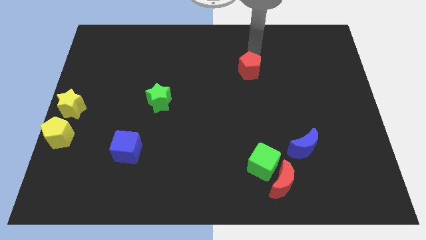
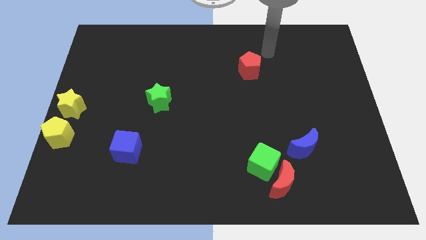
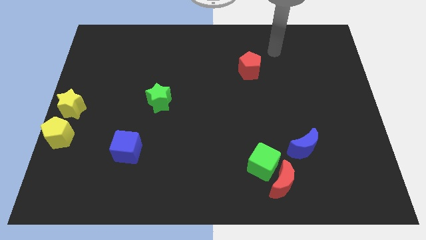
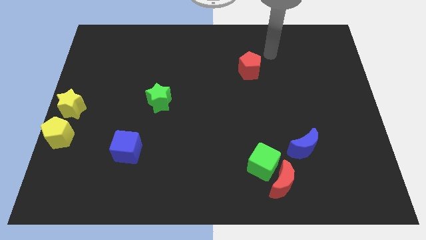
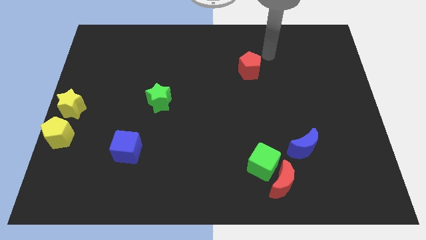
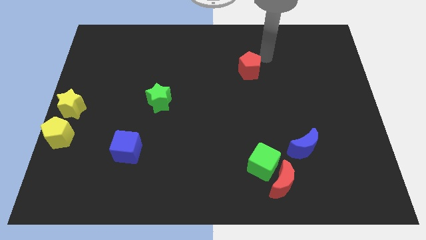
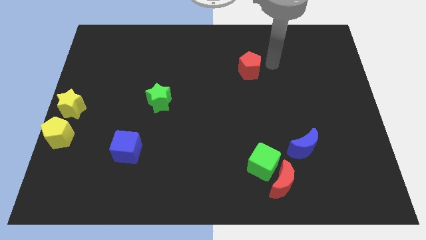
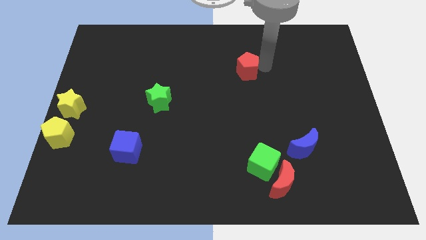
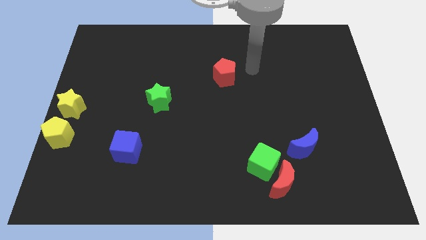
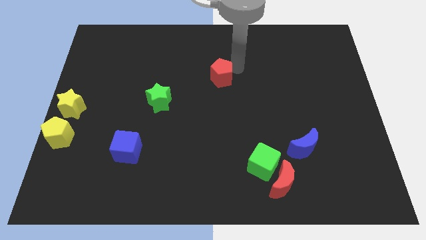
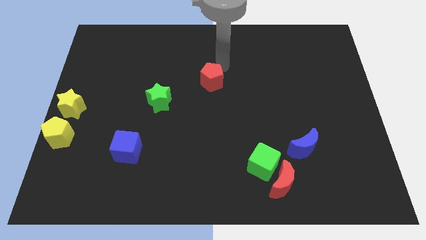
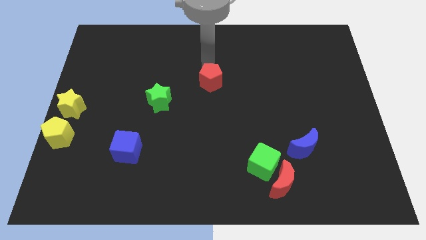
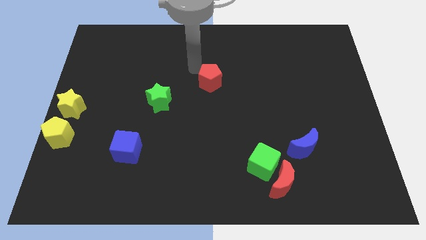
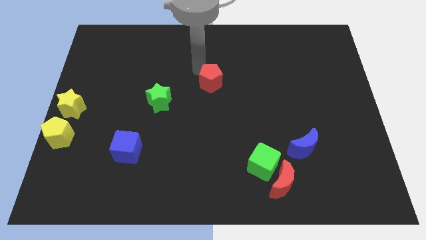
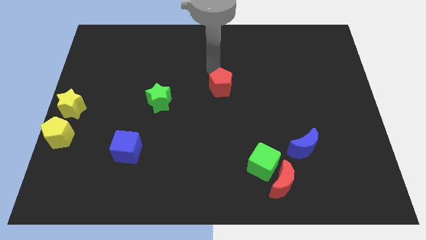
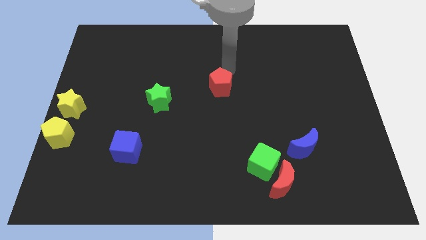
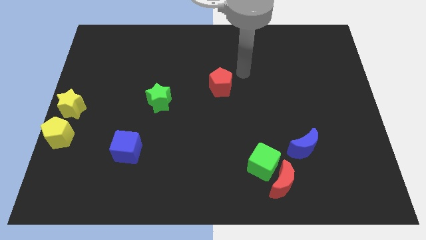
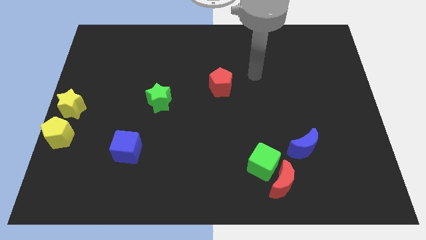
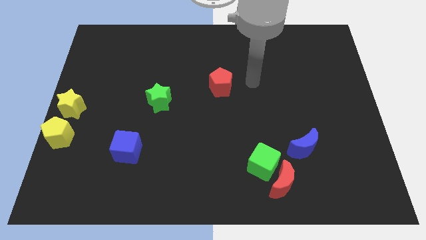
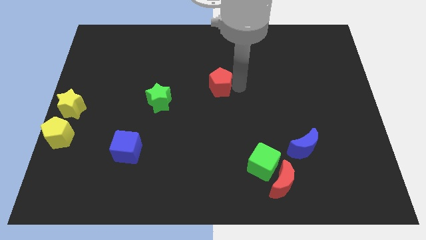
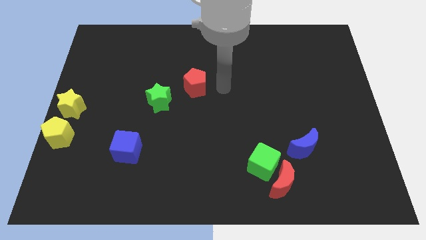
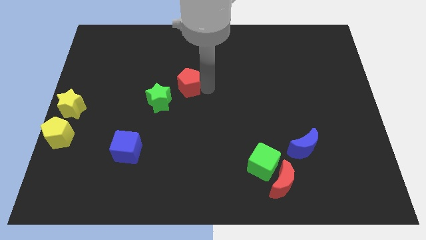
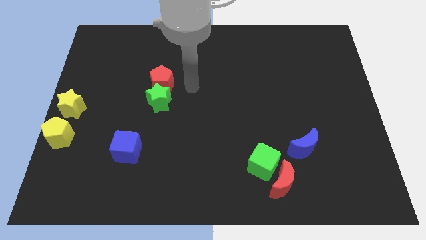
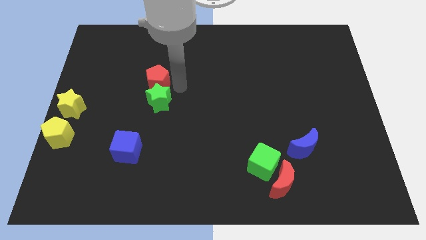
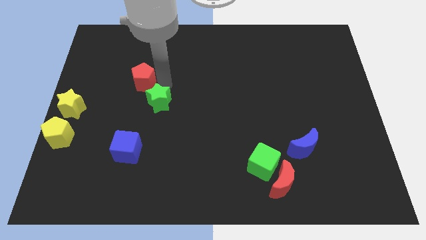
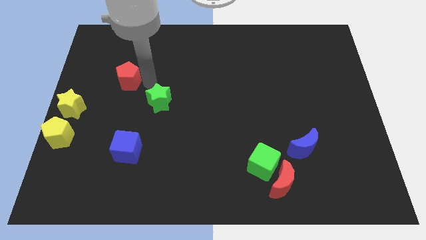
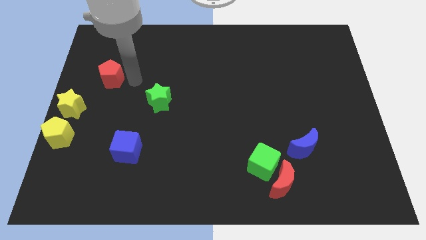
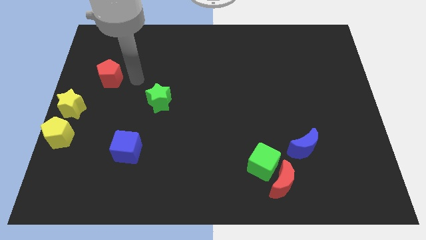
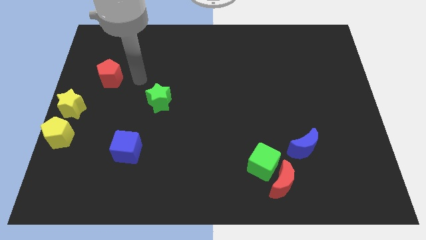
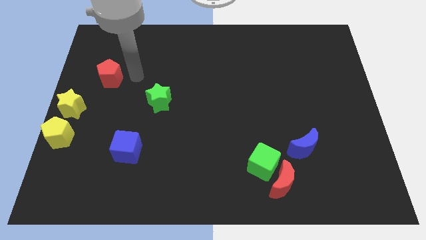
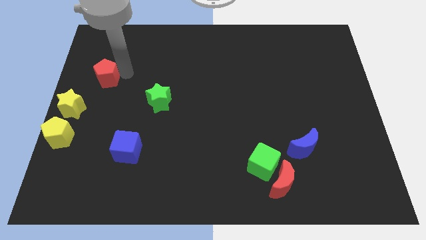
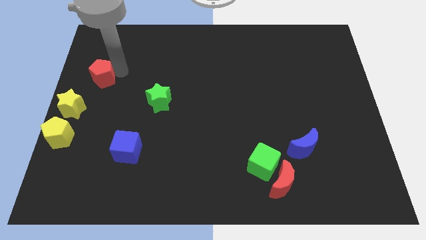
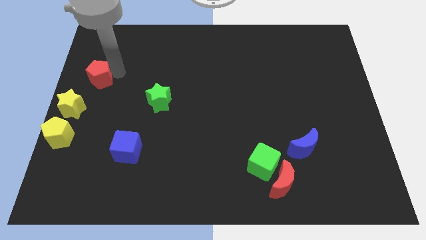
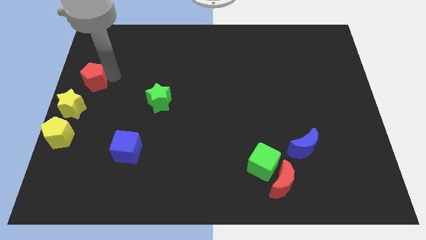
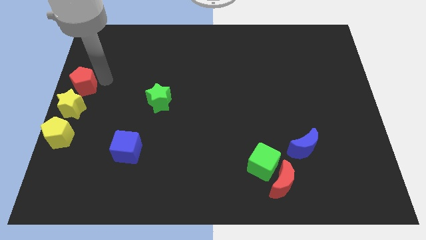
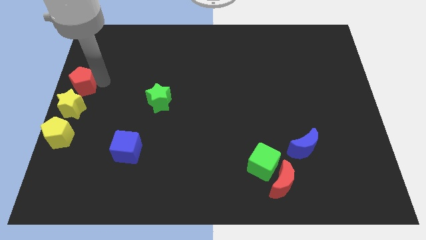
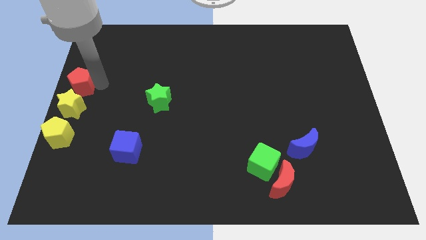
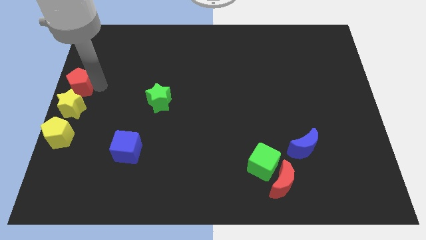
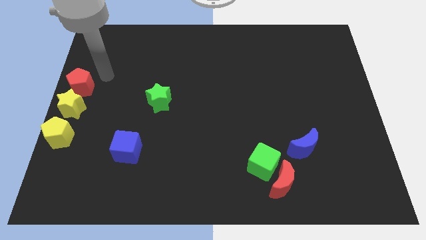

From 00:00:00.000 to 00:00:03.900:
place the red pentagon above the yellow star

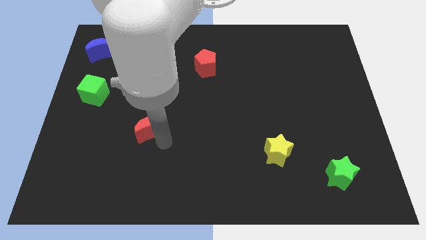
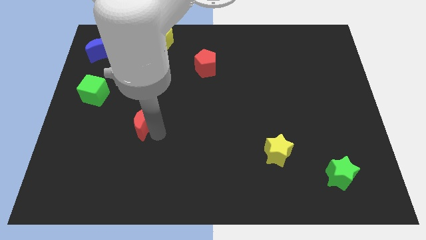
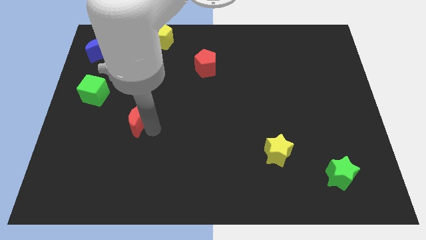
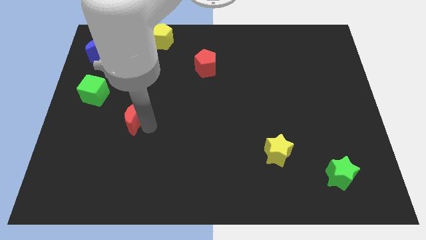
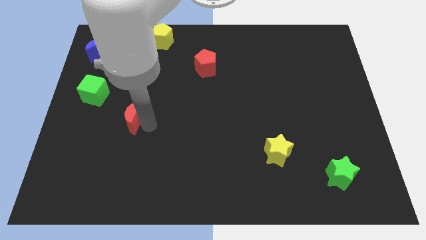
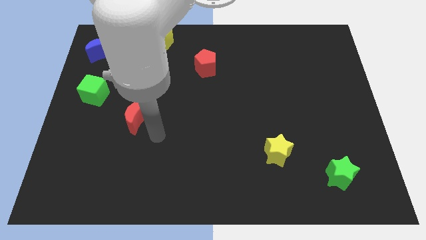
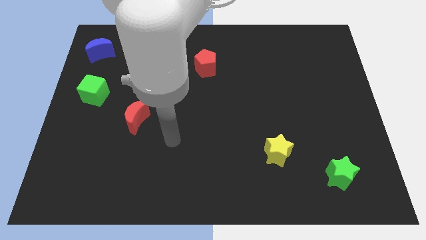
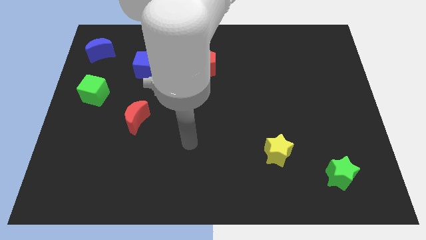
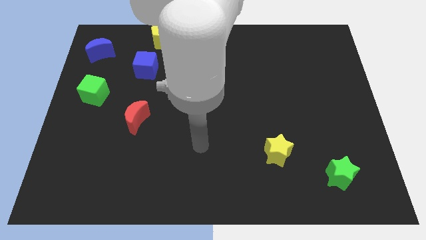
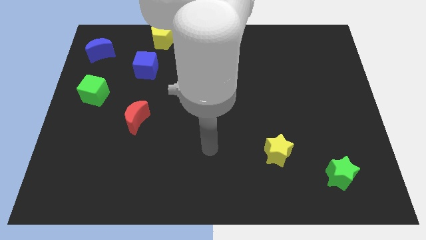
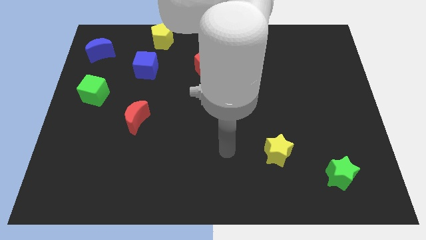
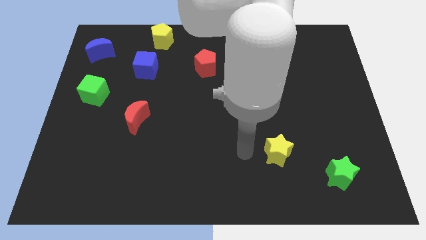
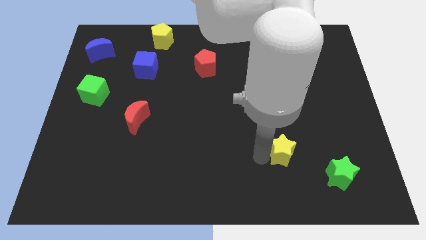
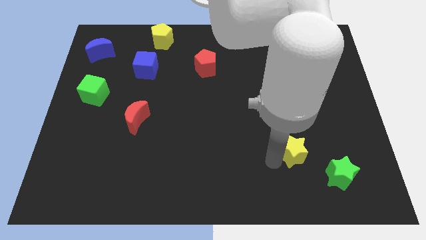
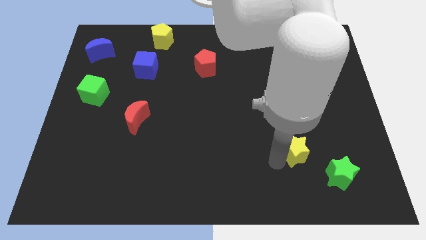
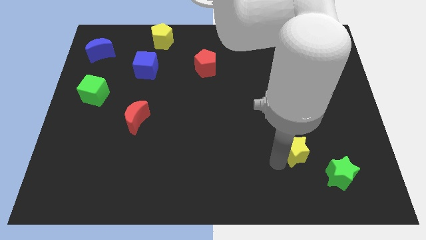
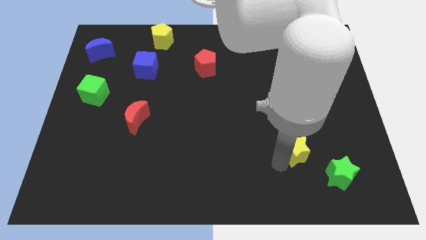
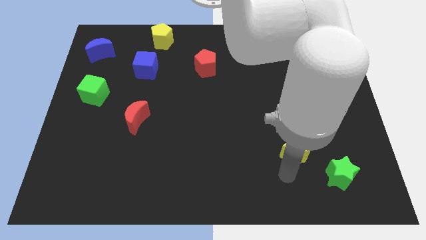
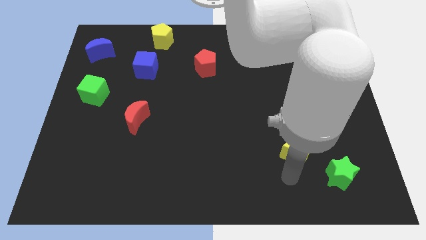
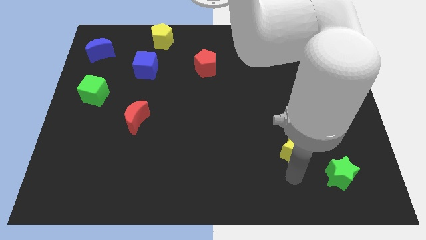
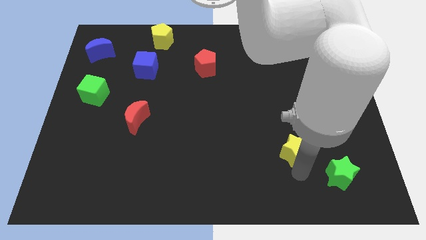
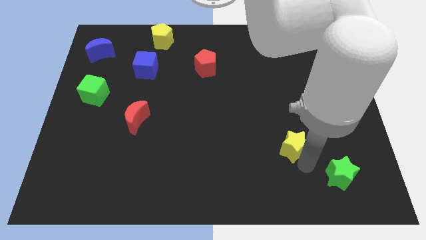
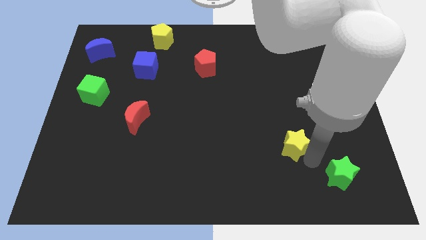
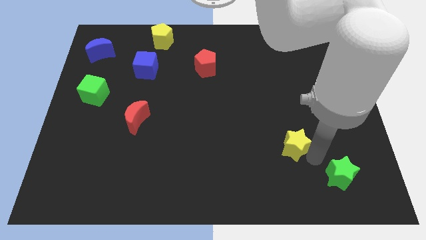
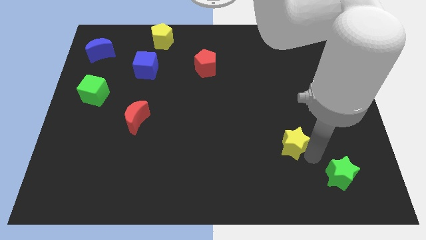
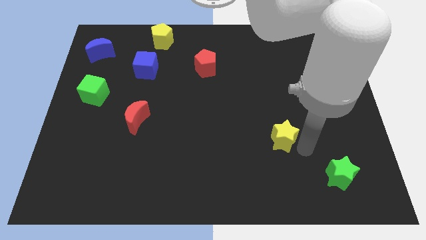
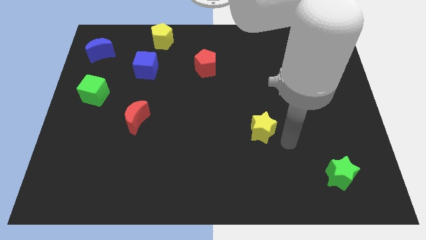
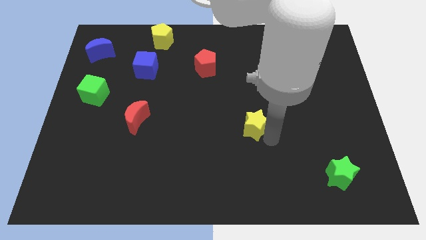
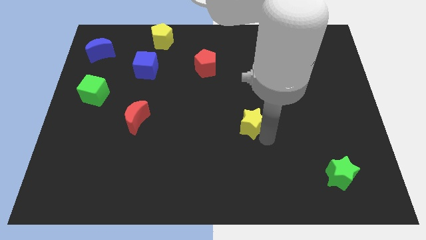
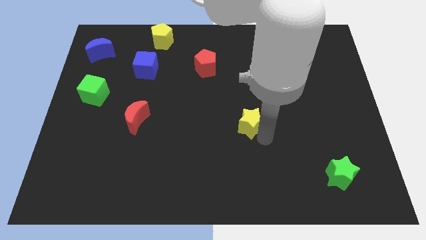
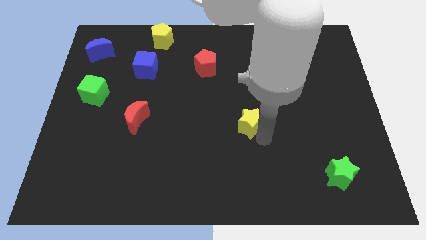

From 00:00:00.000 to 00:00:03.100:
move the yellow star parallel to red moon

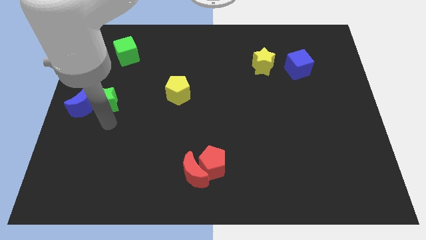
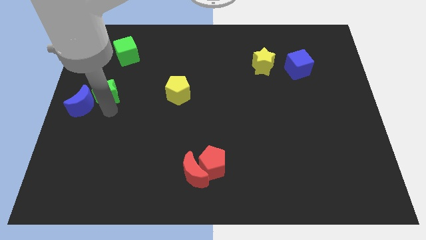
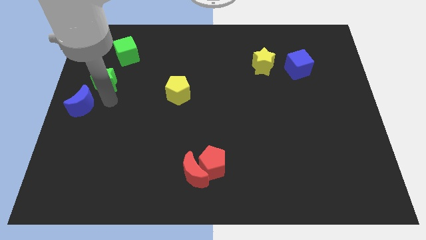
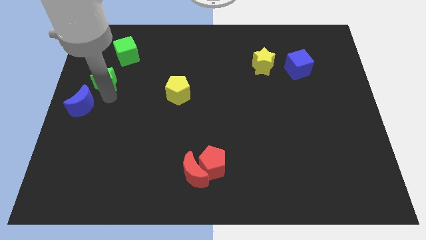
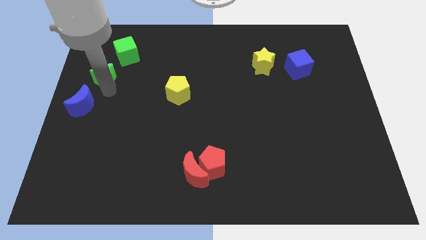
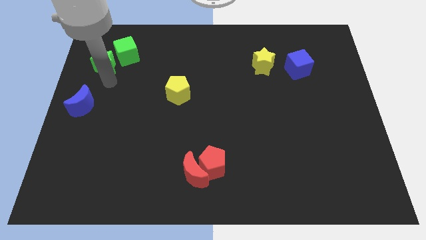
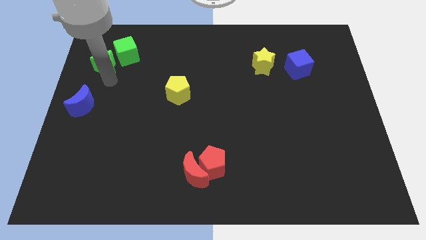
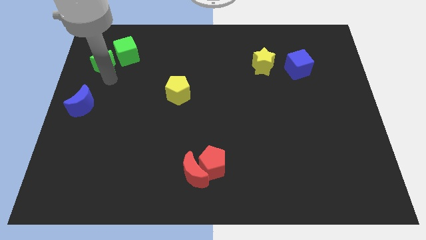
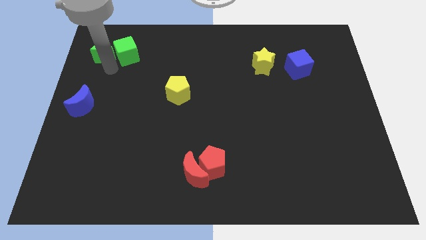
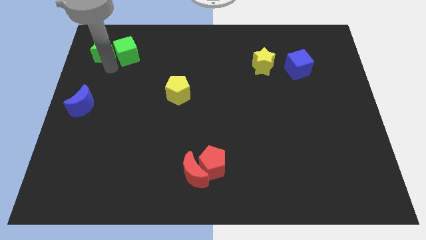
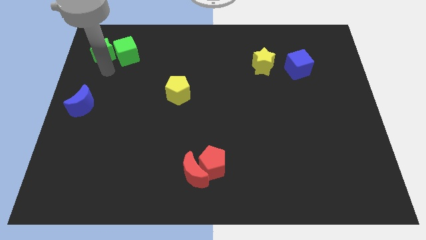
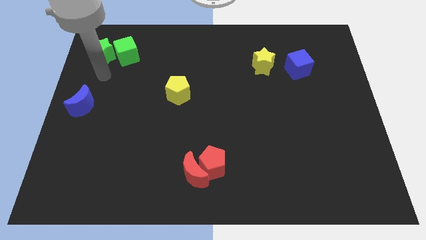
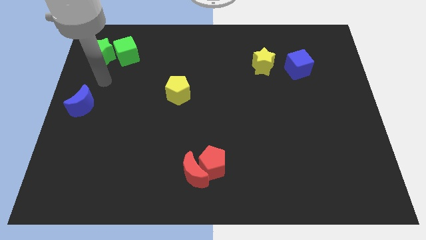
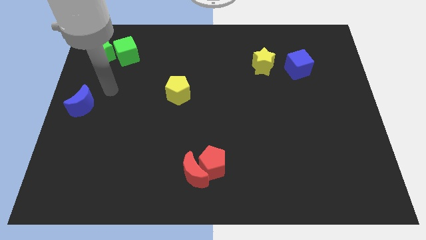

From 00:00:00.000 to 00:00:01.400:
place green star to the left of green cube

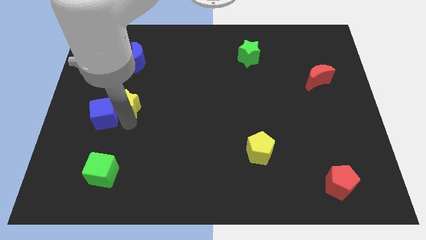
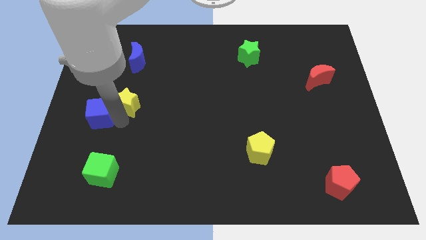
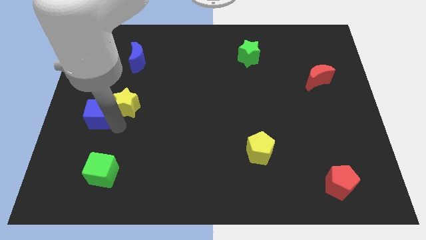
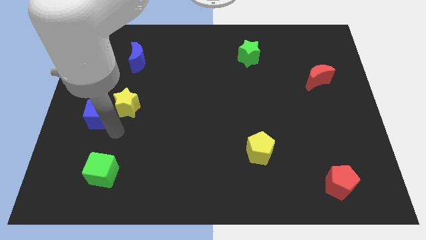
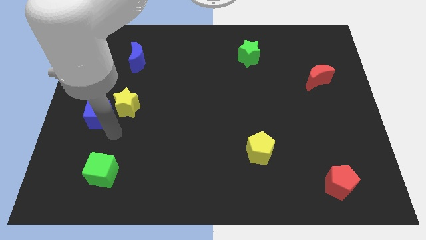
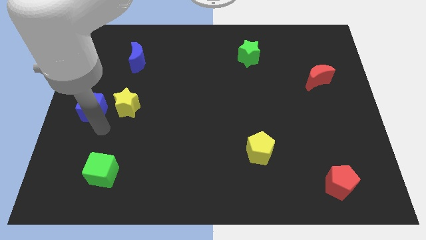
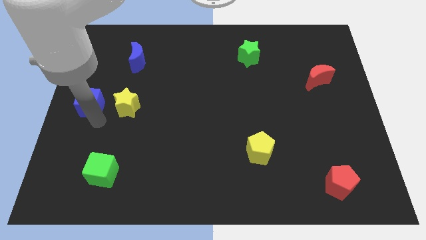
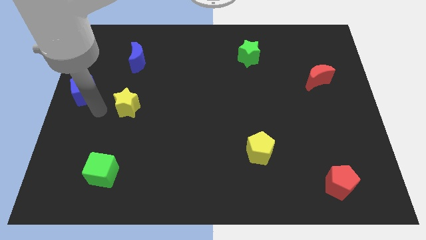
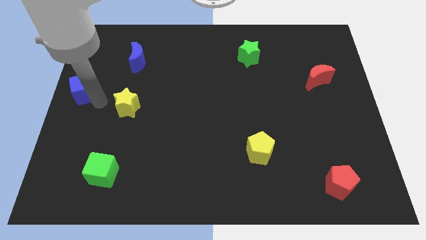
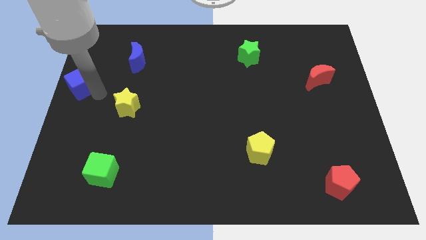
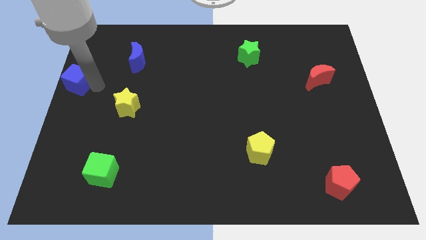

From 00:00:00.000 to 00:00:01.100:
separate blue cube from yellow star
